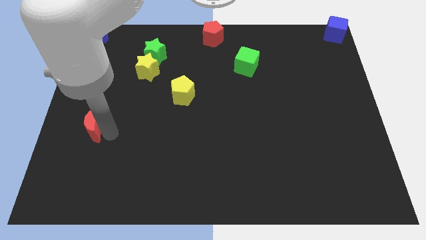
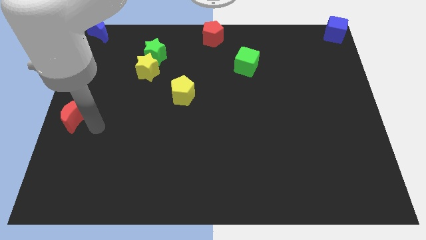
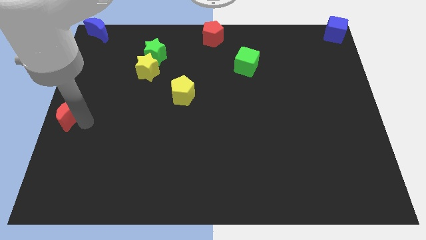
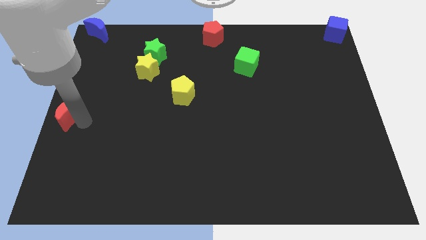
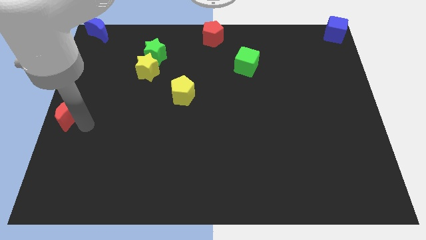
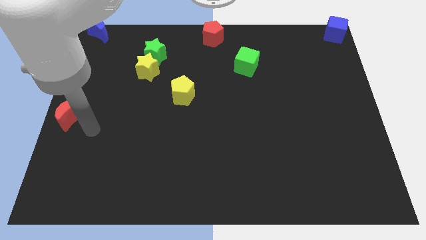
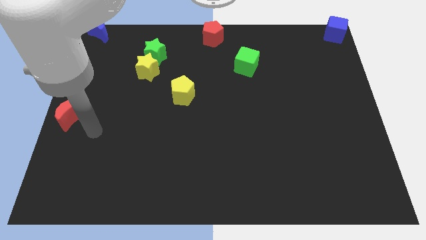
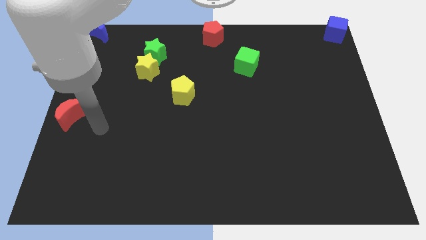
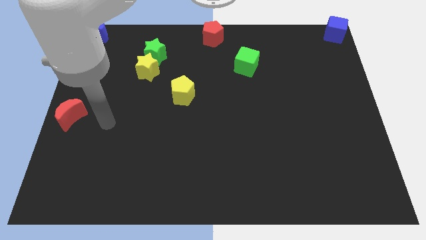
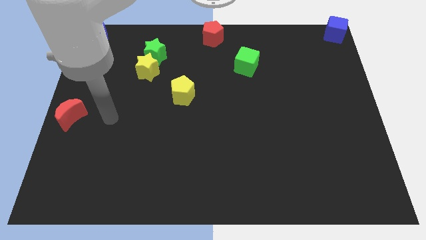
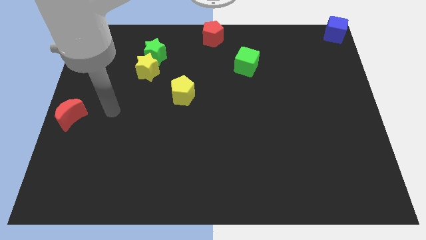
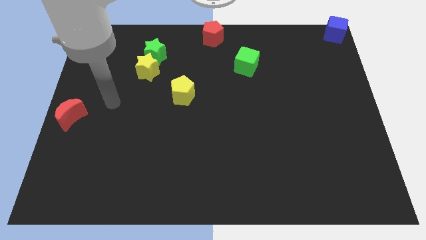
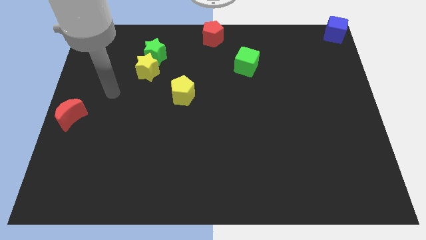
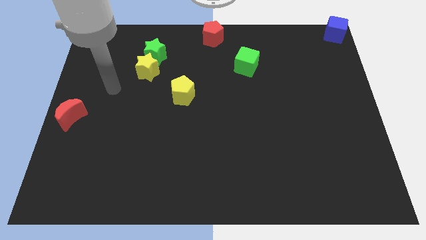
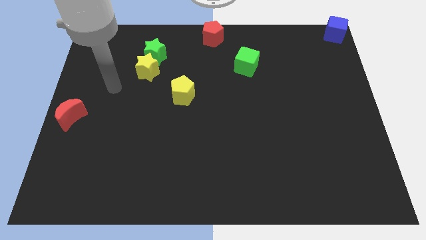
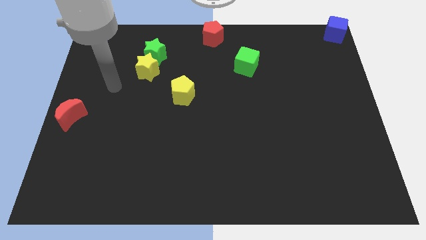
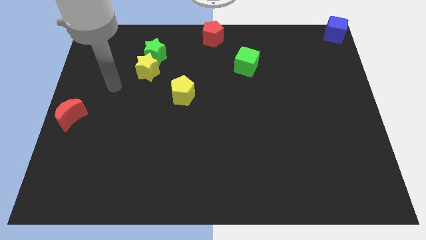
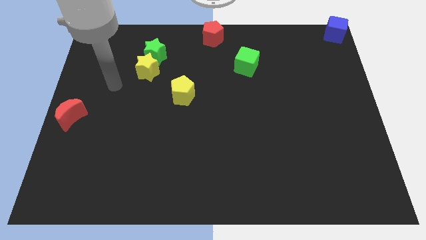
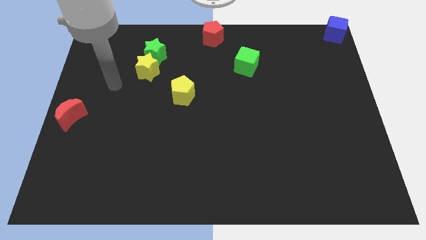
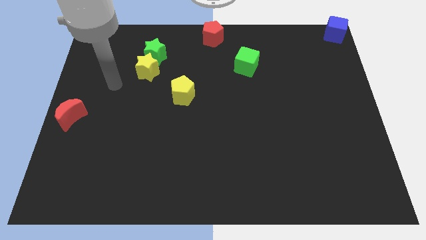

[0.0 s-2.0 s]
move the red moon to the center left of the board

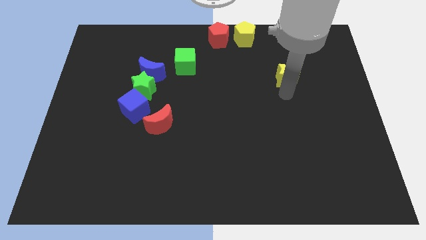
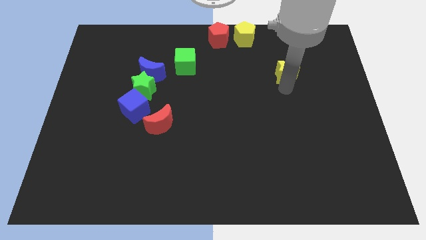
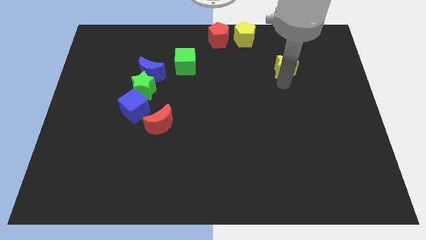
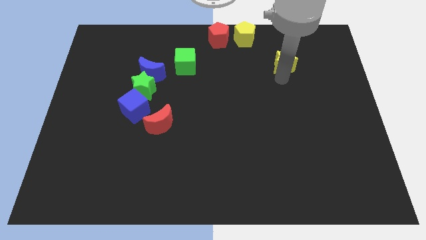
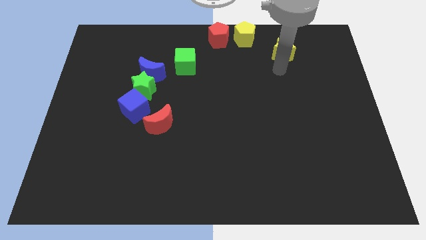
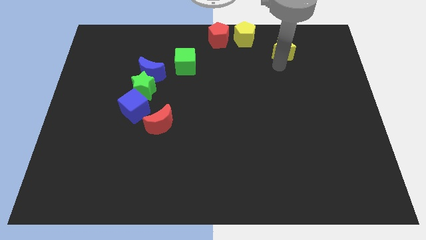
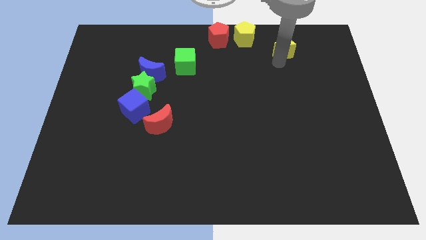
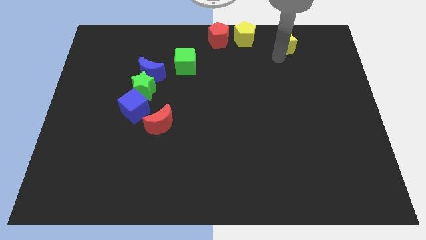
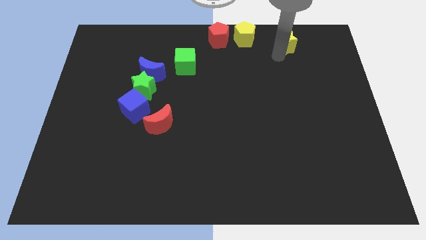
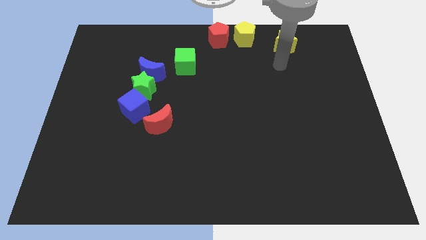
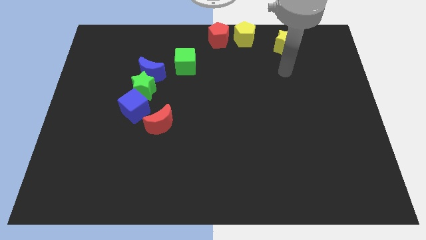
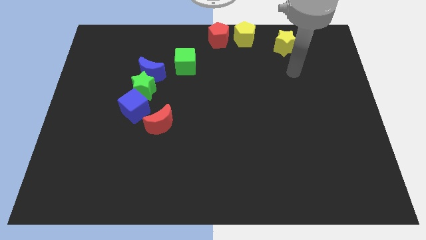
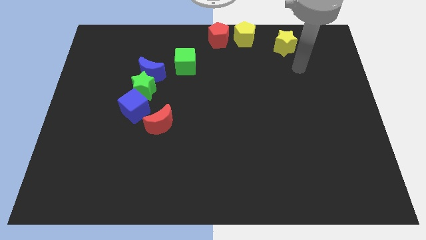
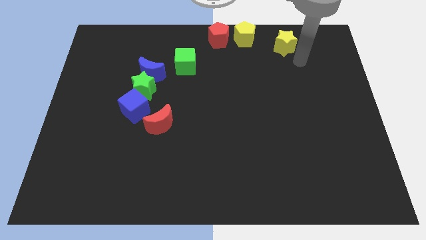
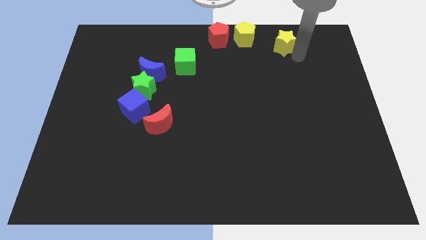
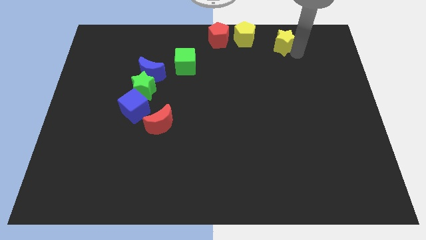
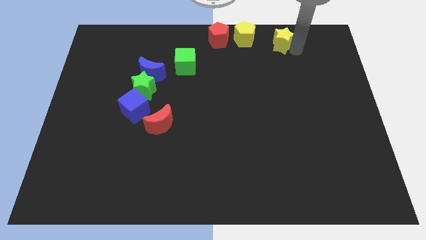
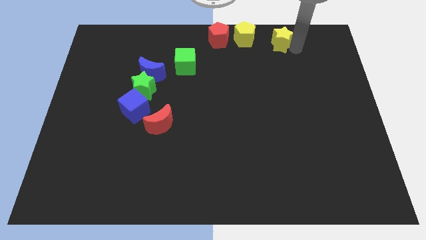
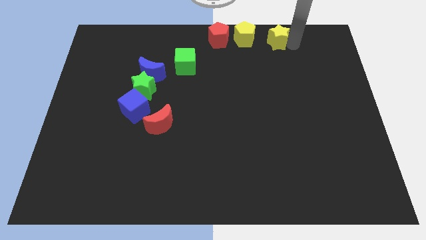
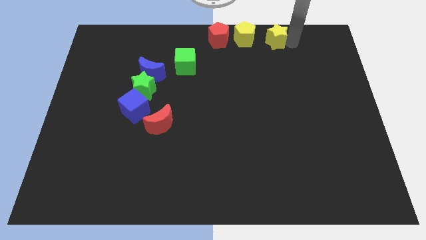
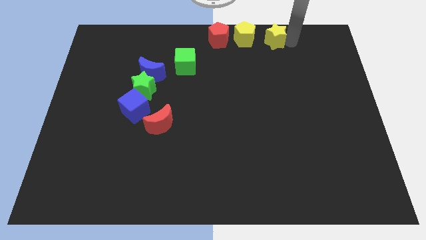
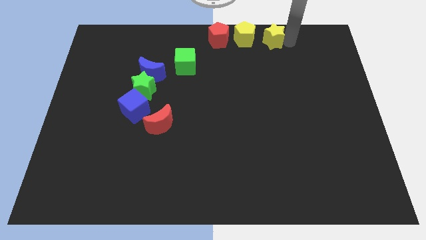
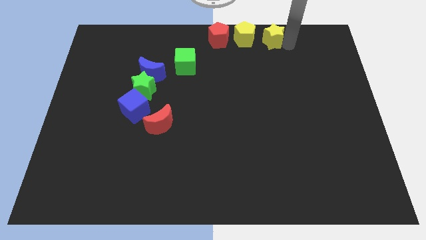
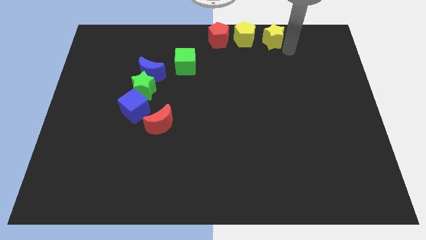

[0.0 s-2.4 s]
place the yellow star close to the yellow pentagon

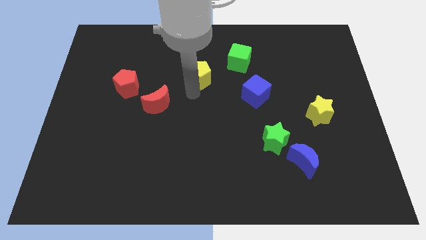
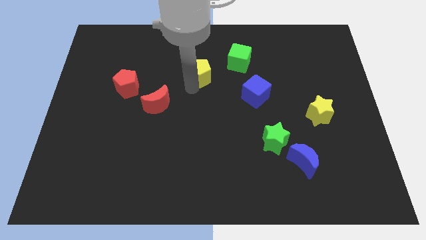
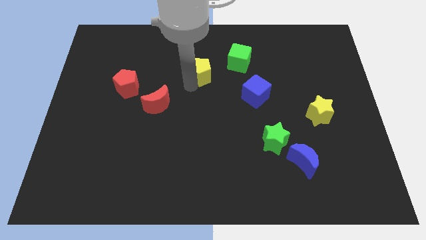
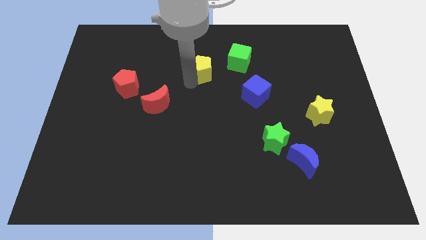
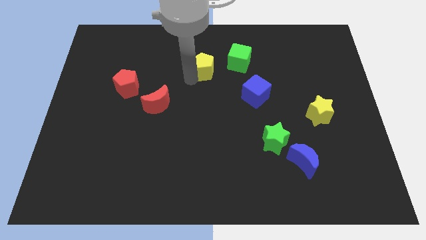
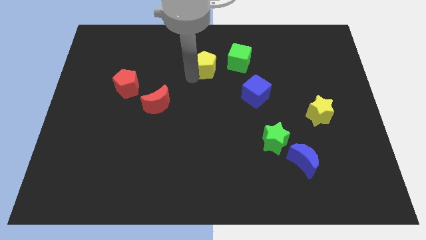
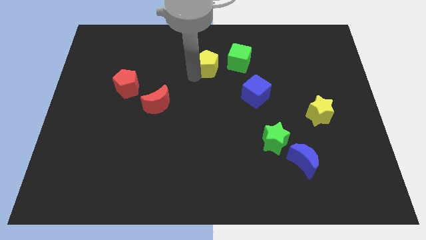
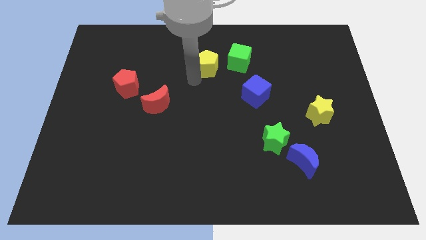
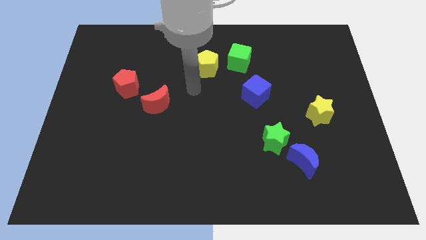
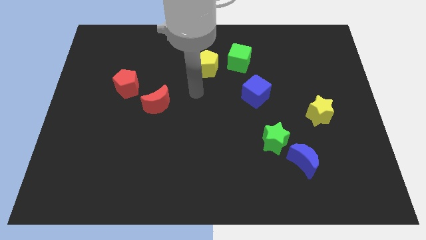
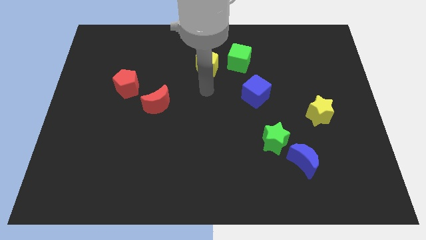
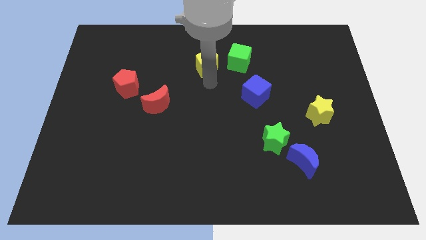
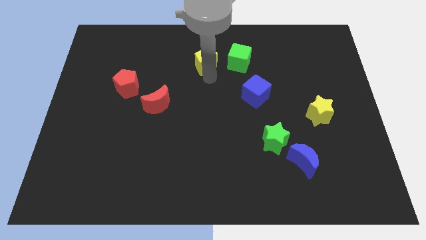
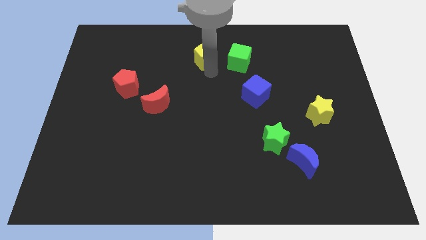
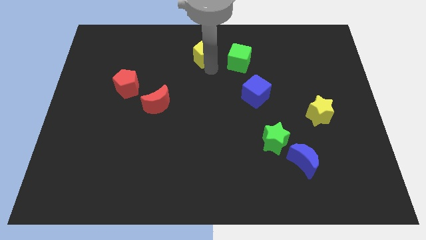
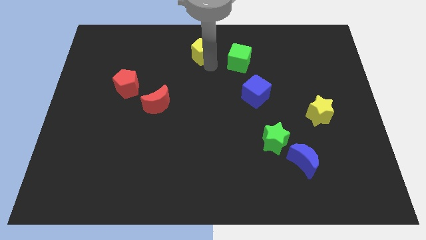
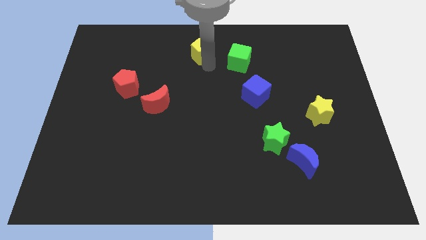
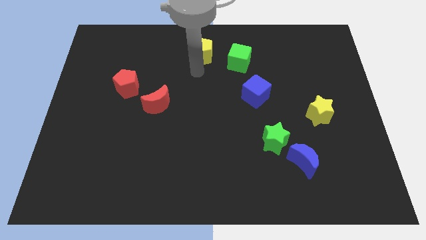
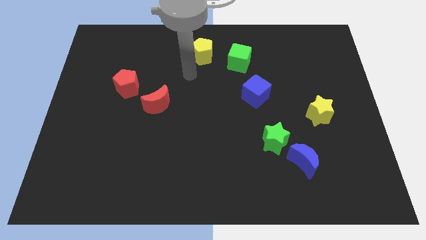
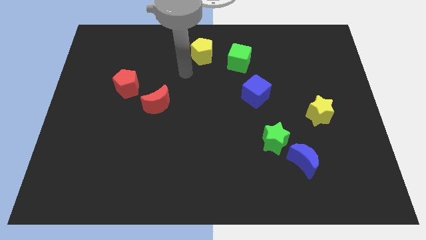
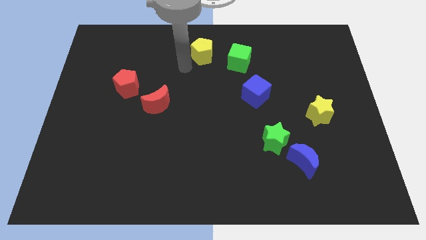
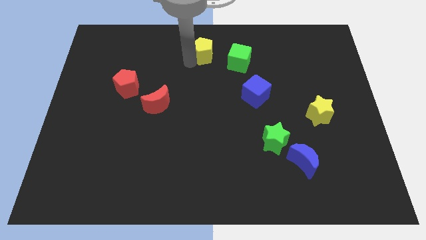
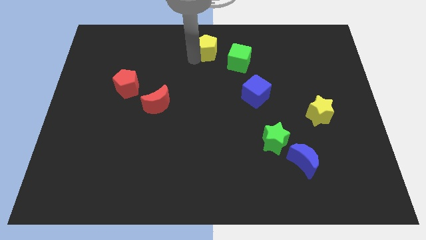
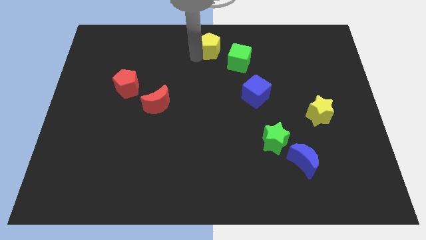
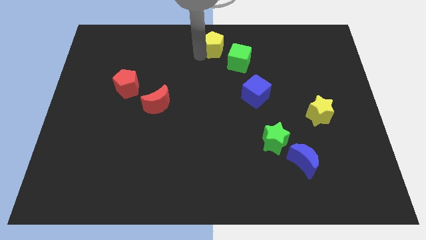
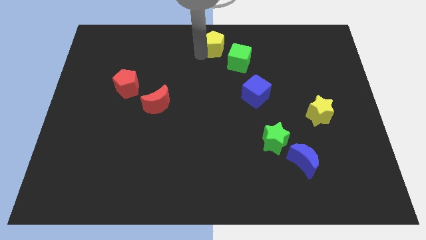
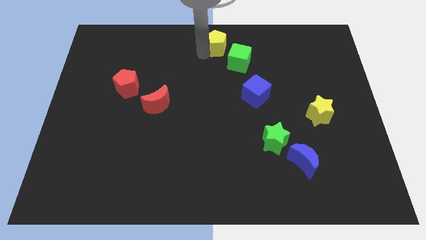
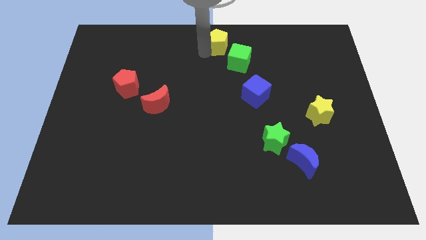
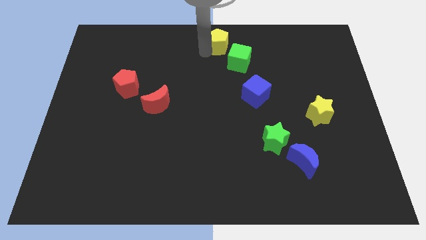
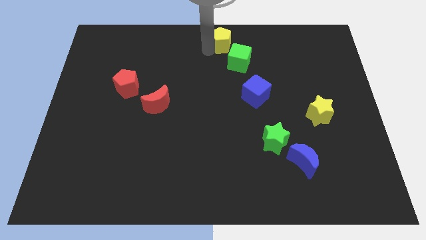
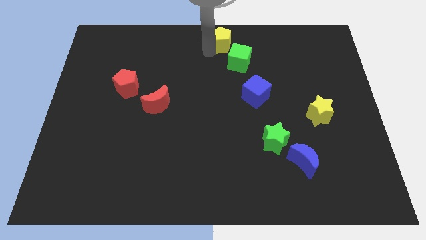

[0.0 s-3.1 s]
push the yellow pentagon to the top center of the board

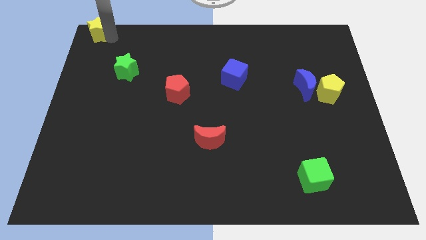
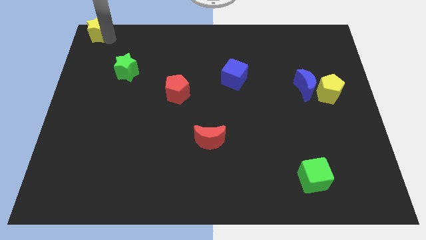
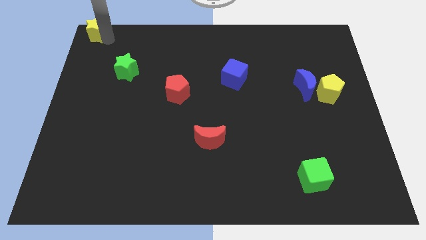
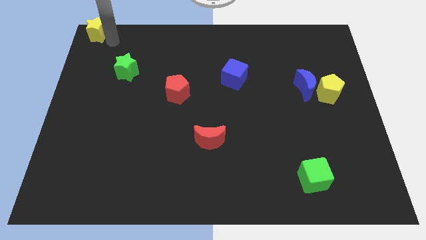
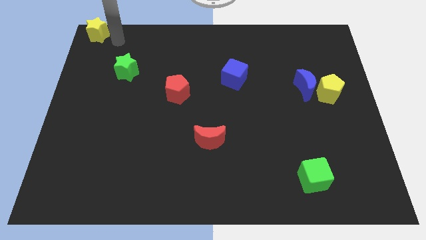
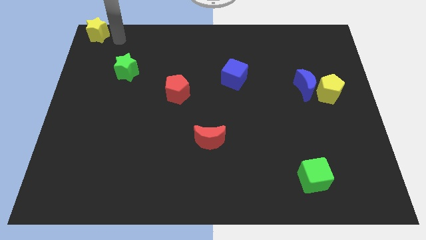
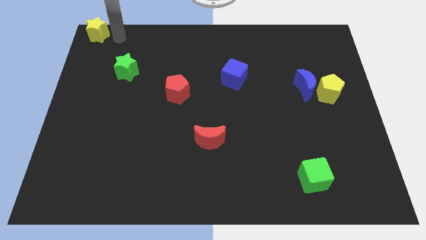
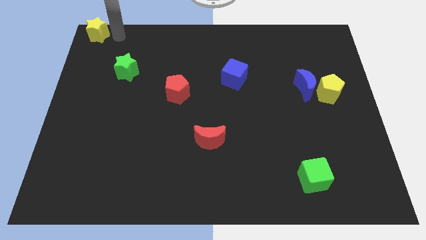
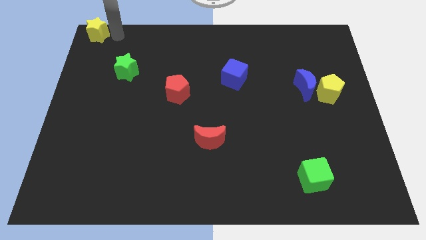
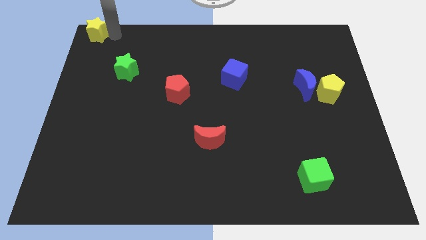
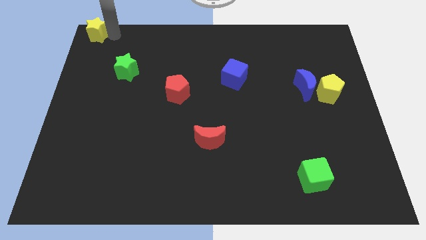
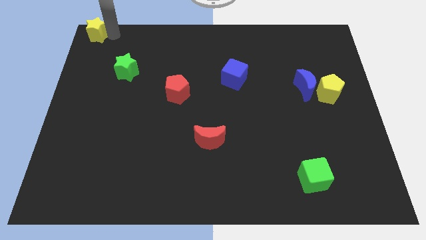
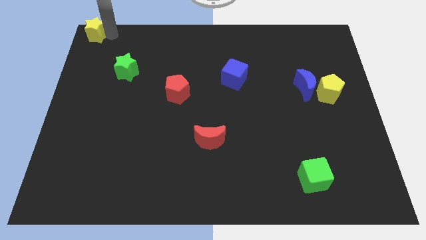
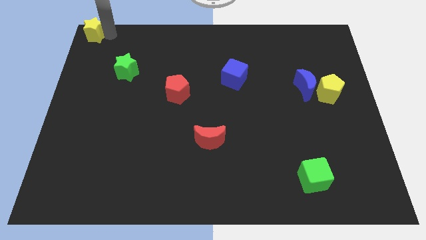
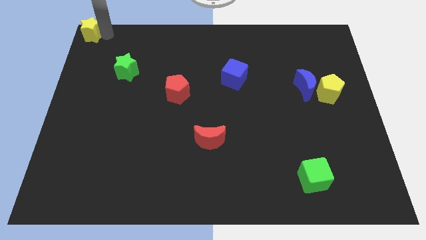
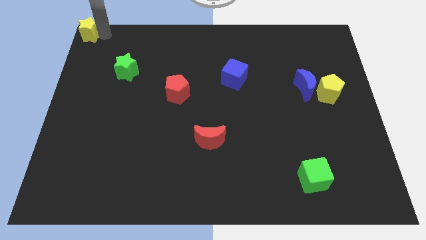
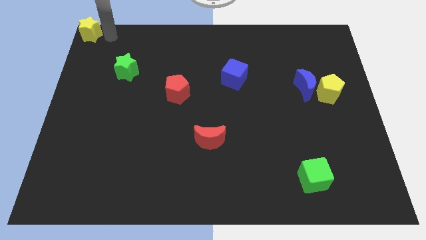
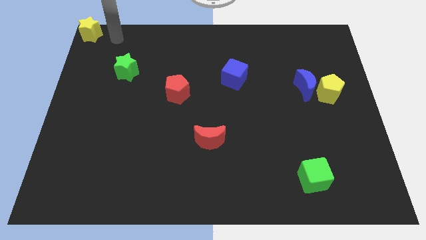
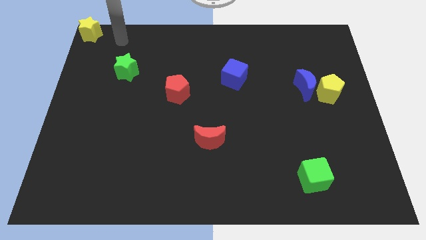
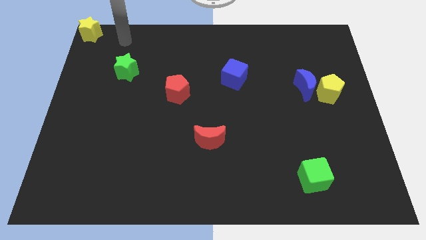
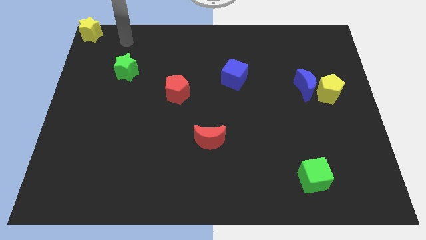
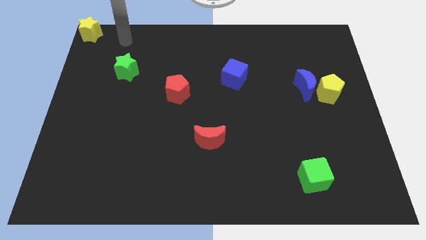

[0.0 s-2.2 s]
push the yellow star to the top left corner of the board
